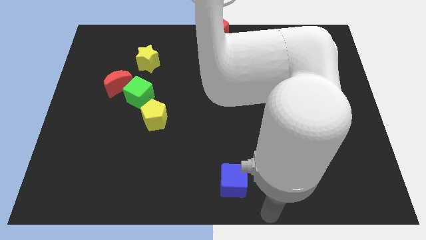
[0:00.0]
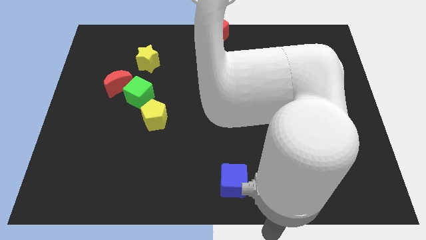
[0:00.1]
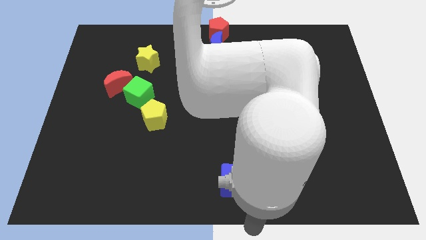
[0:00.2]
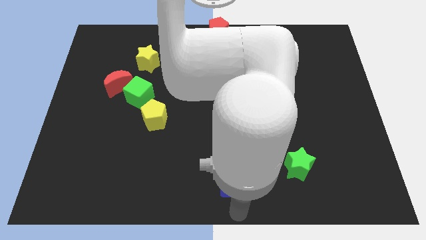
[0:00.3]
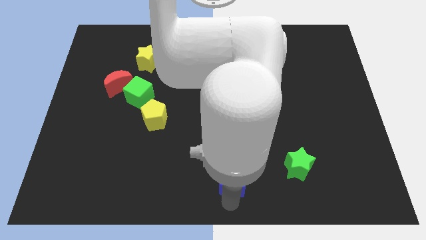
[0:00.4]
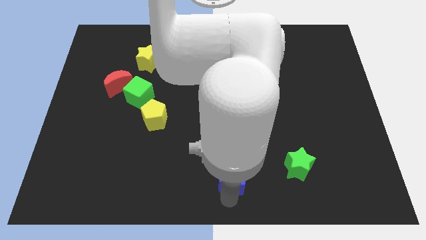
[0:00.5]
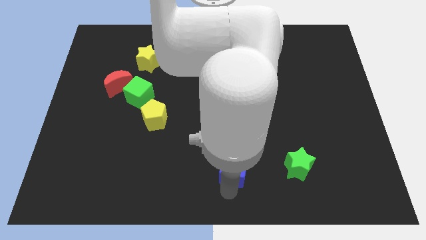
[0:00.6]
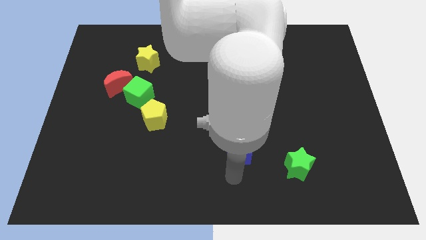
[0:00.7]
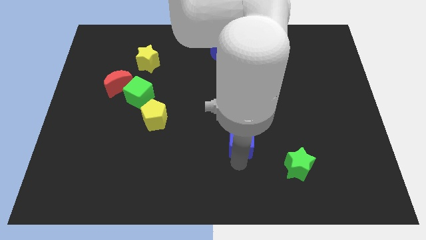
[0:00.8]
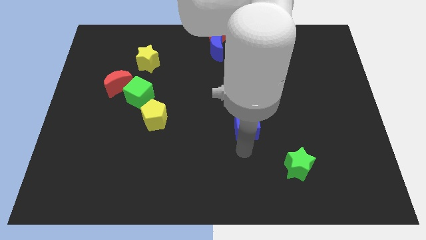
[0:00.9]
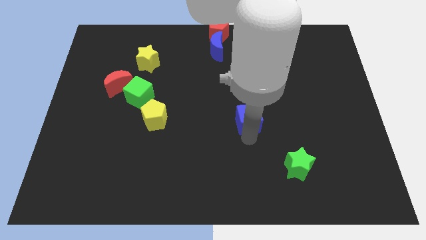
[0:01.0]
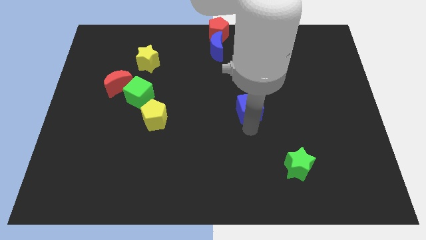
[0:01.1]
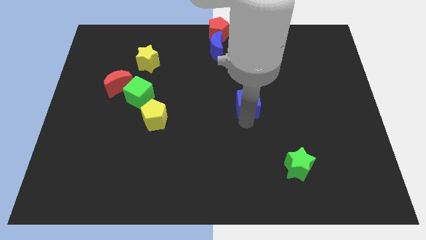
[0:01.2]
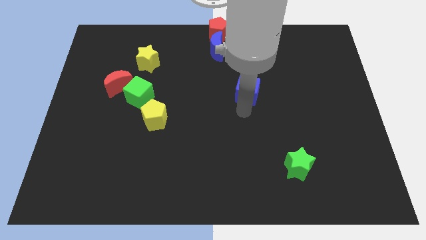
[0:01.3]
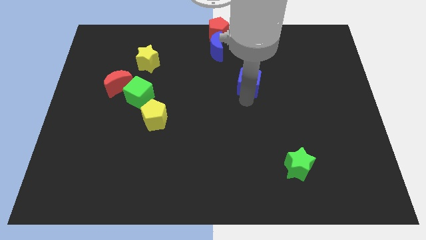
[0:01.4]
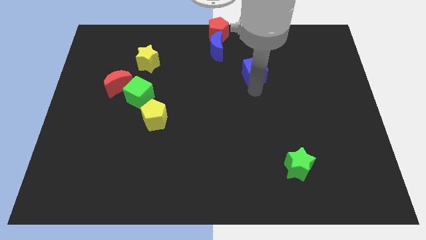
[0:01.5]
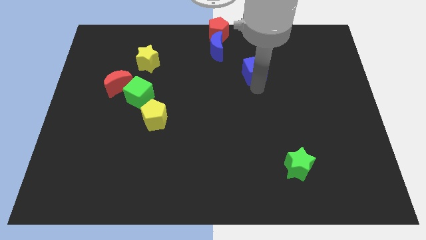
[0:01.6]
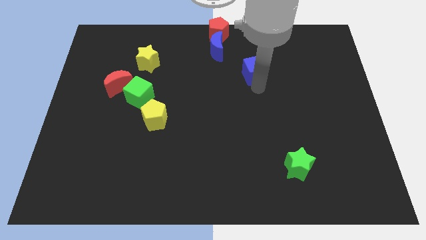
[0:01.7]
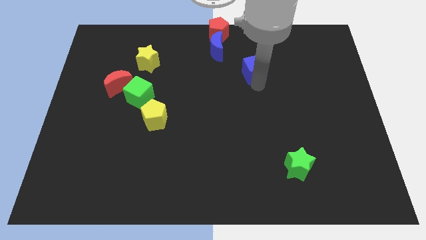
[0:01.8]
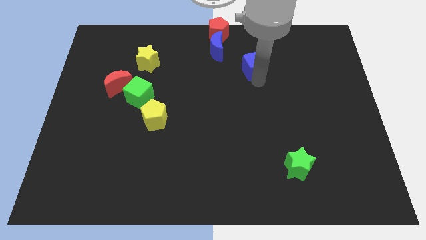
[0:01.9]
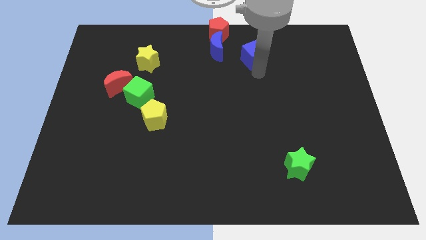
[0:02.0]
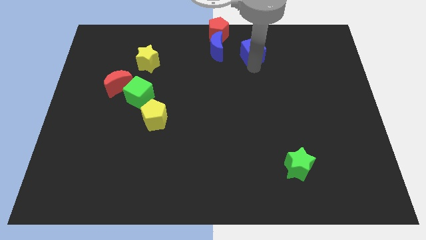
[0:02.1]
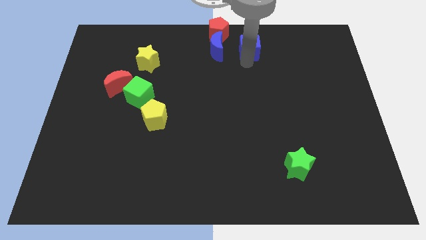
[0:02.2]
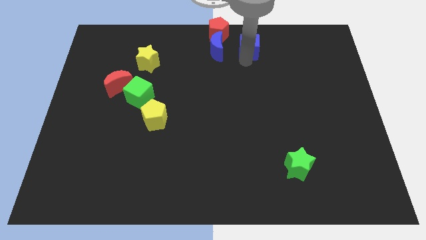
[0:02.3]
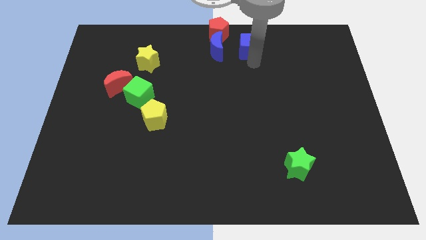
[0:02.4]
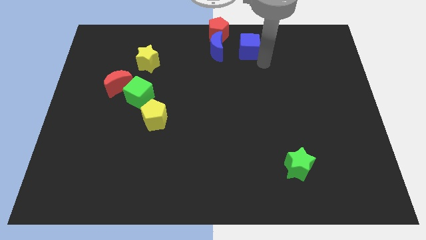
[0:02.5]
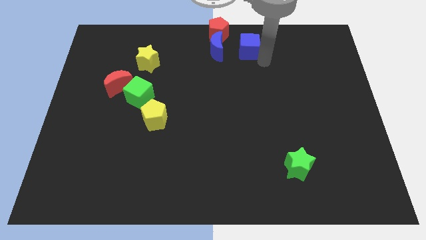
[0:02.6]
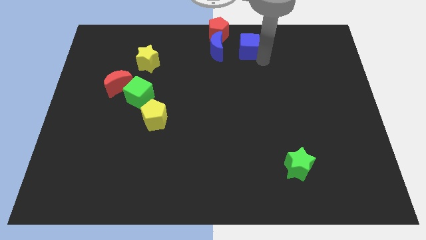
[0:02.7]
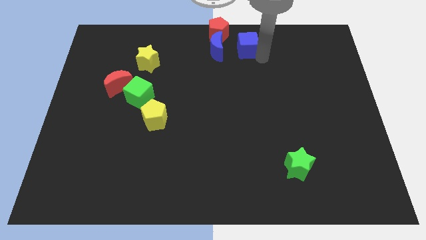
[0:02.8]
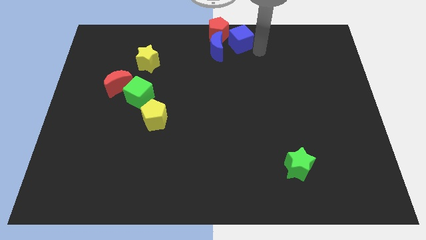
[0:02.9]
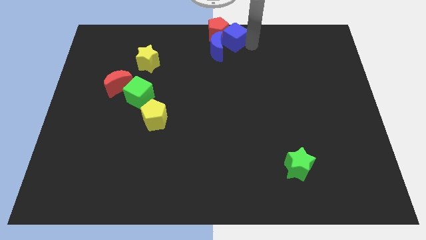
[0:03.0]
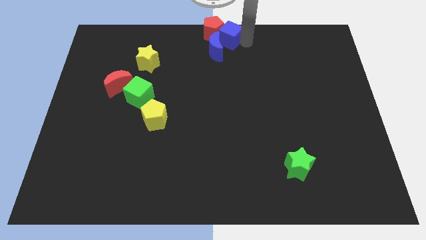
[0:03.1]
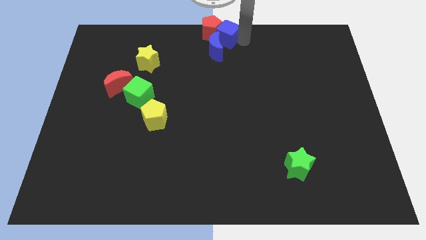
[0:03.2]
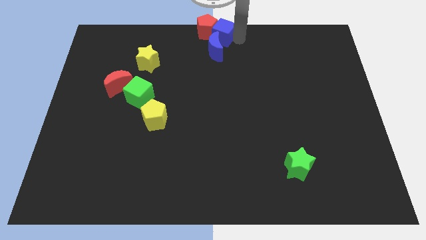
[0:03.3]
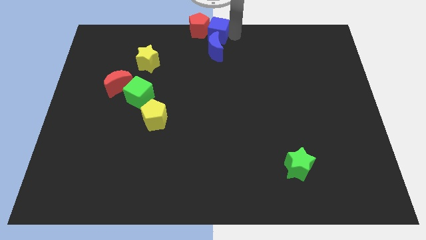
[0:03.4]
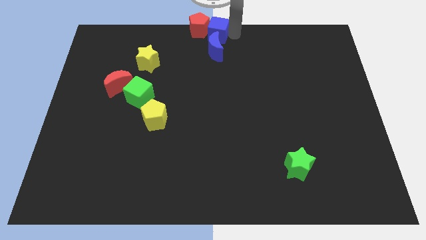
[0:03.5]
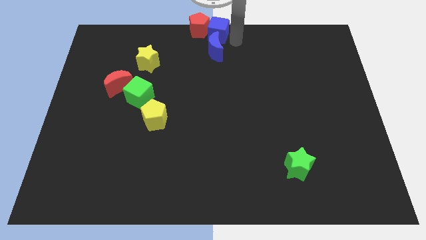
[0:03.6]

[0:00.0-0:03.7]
place the blue cube into the red pentagon

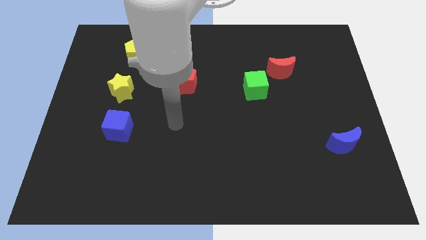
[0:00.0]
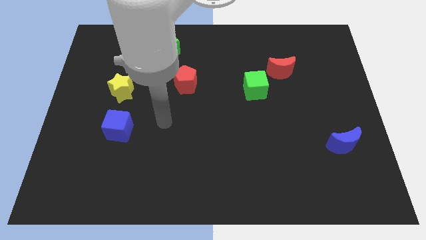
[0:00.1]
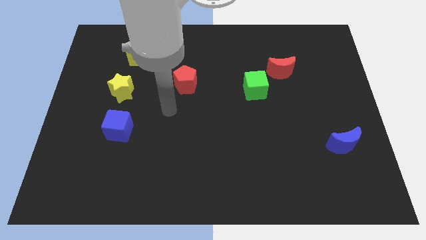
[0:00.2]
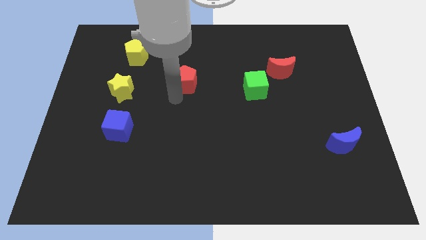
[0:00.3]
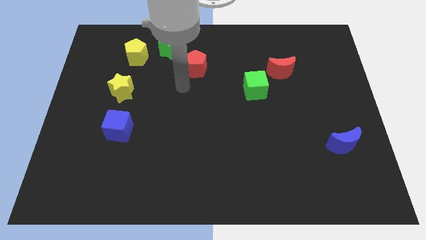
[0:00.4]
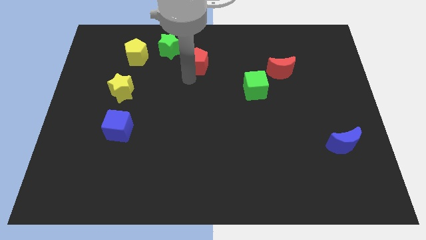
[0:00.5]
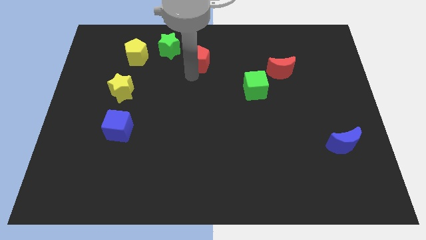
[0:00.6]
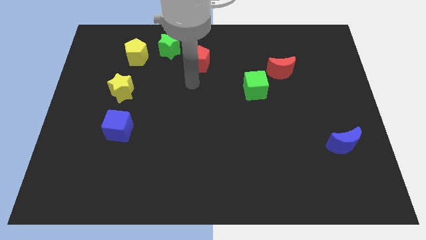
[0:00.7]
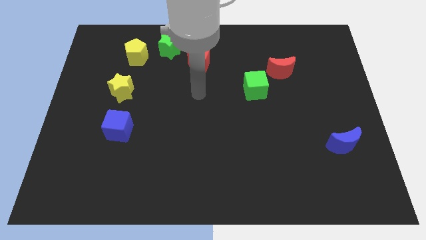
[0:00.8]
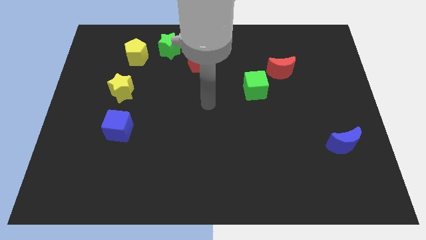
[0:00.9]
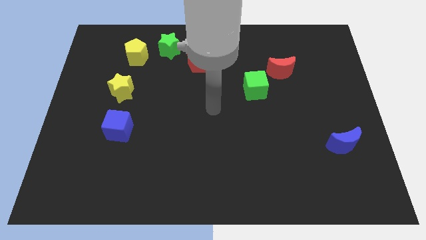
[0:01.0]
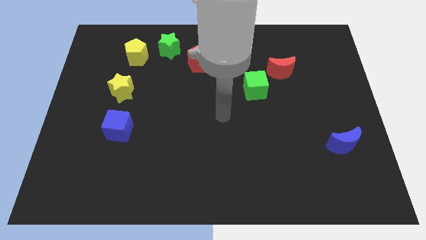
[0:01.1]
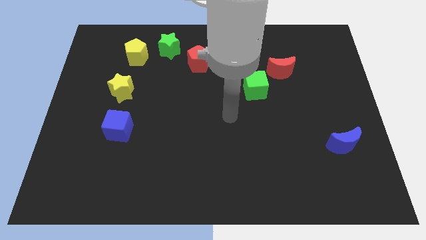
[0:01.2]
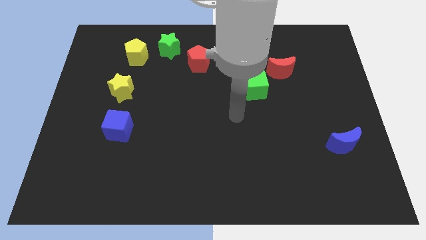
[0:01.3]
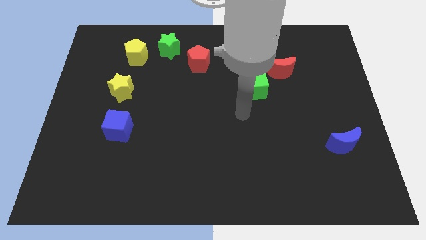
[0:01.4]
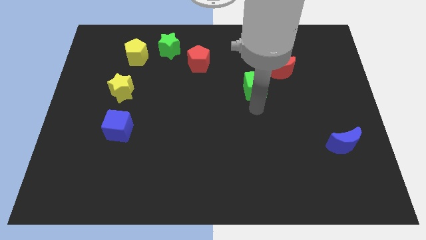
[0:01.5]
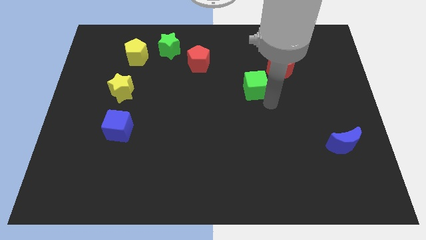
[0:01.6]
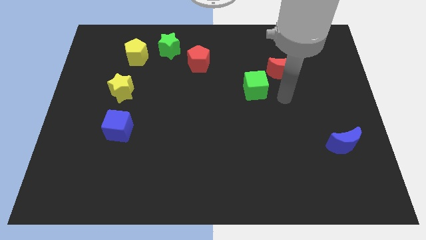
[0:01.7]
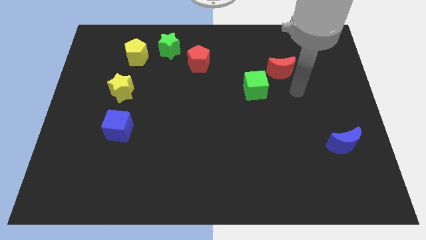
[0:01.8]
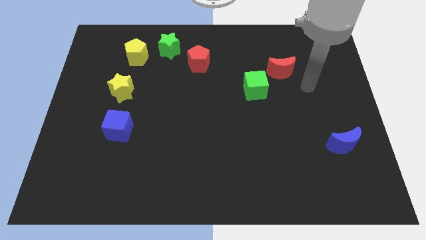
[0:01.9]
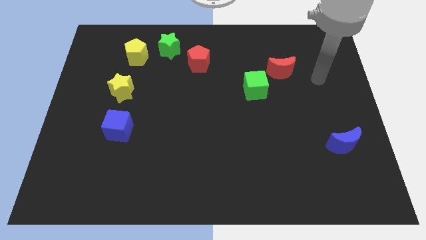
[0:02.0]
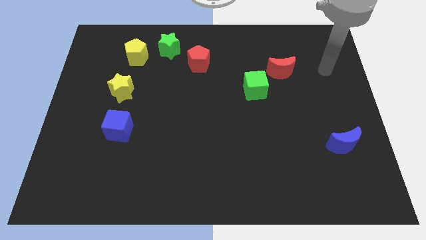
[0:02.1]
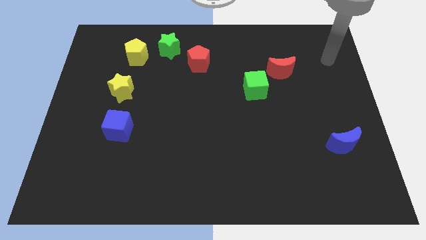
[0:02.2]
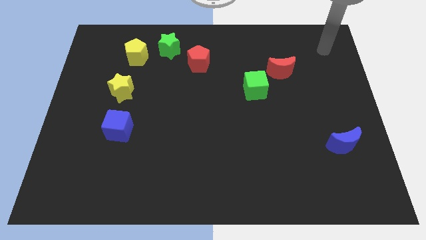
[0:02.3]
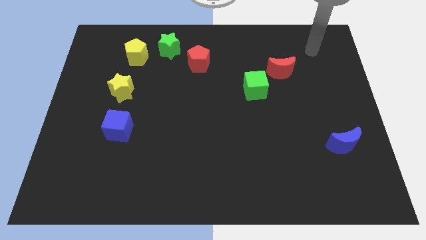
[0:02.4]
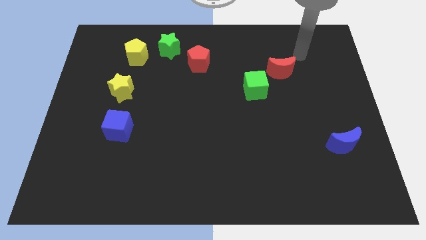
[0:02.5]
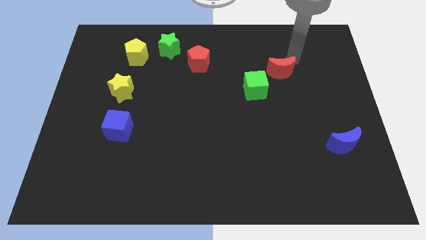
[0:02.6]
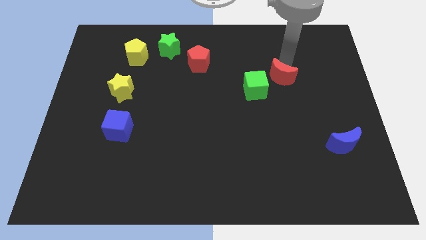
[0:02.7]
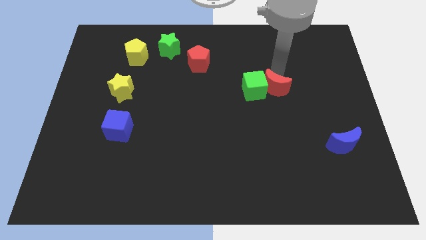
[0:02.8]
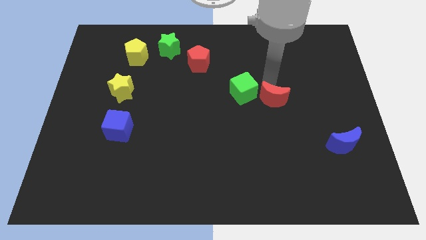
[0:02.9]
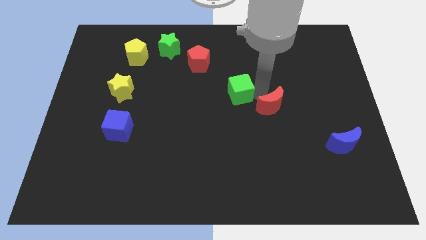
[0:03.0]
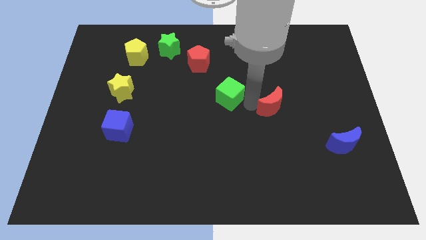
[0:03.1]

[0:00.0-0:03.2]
move your arm towards the red moon

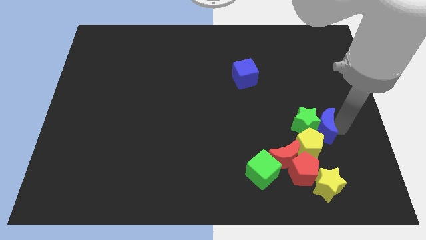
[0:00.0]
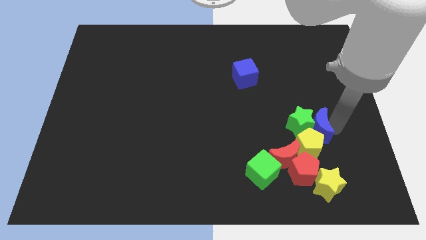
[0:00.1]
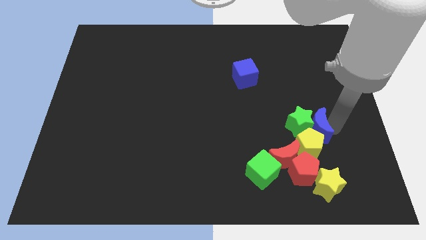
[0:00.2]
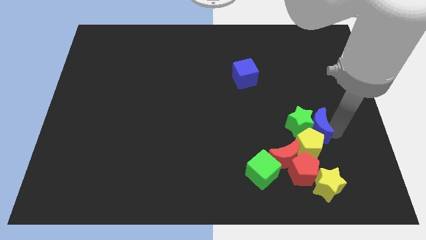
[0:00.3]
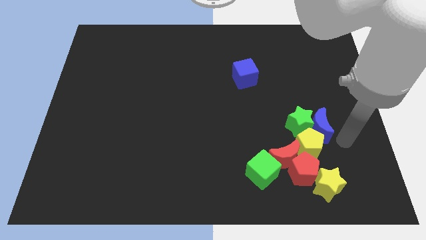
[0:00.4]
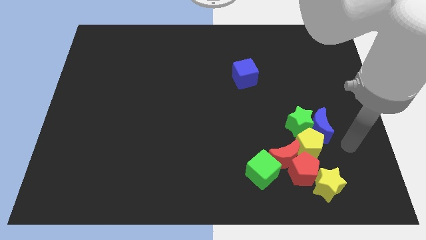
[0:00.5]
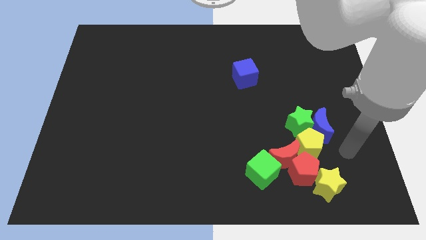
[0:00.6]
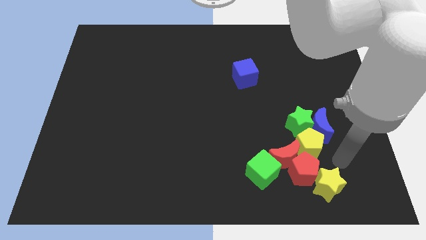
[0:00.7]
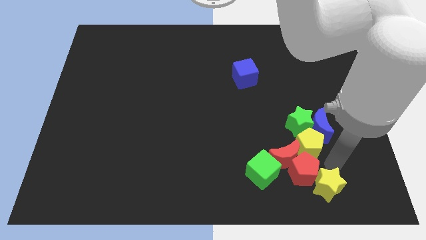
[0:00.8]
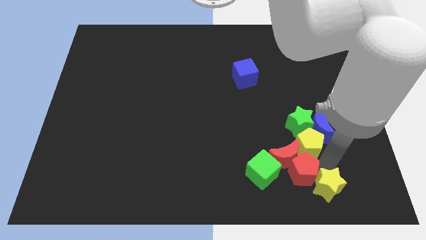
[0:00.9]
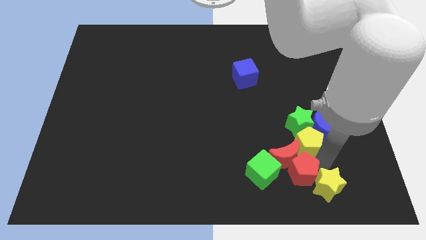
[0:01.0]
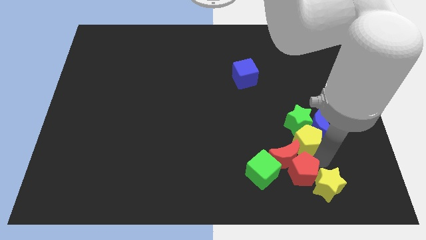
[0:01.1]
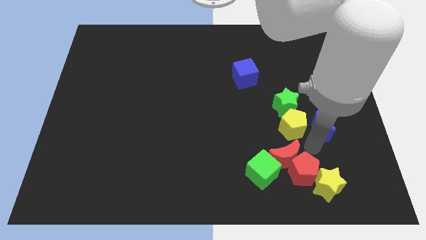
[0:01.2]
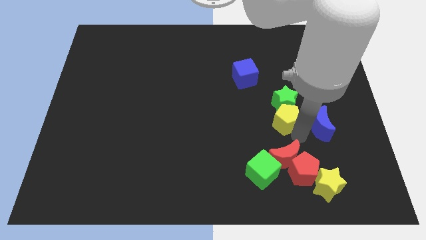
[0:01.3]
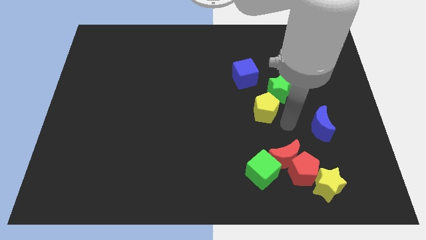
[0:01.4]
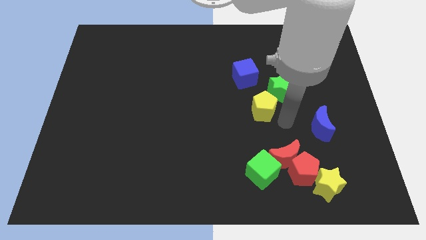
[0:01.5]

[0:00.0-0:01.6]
push the yellow pentagon slightly upwards

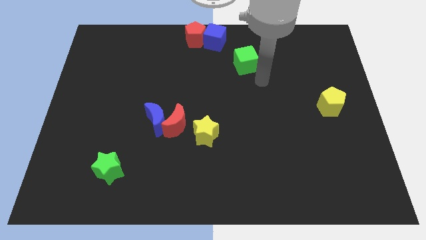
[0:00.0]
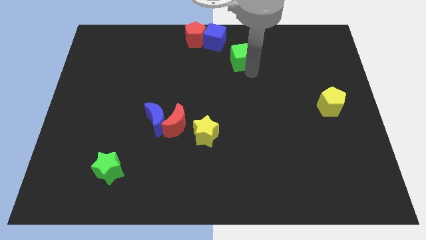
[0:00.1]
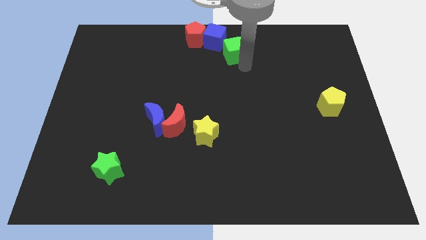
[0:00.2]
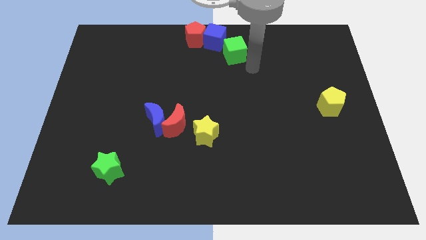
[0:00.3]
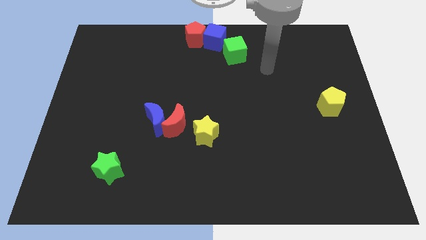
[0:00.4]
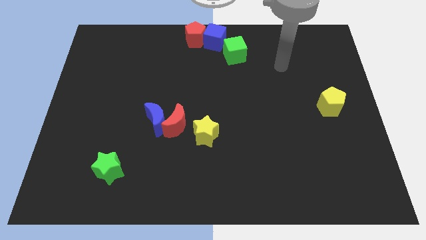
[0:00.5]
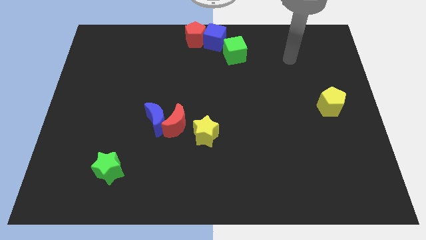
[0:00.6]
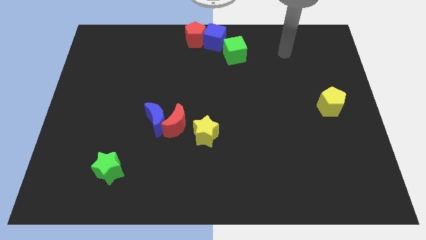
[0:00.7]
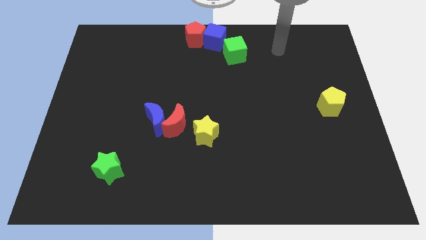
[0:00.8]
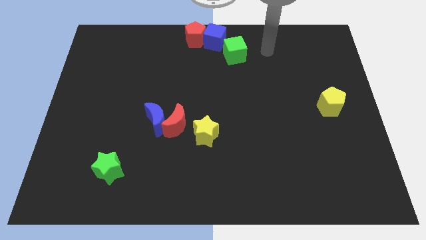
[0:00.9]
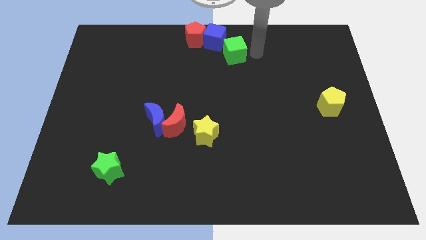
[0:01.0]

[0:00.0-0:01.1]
move green cube towards blue cube
